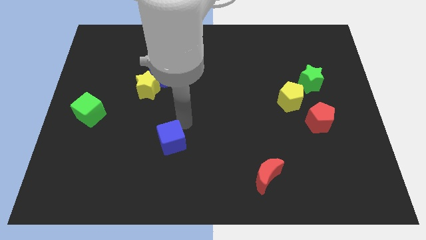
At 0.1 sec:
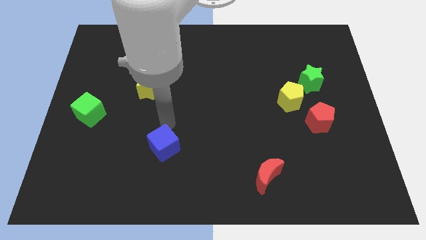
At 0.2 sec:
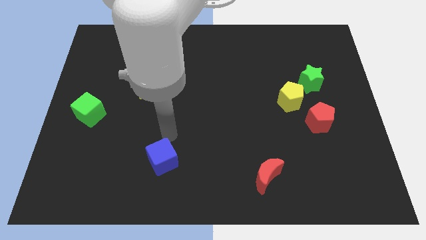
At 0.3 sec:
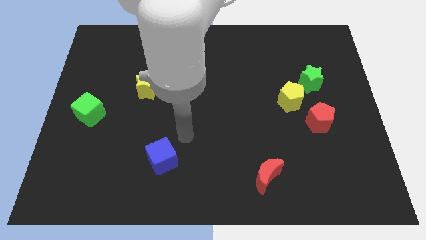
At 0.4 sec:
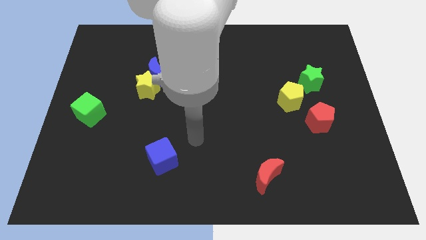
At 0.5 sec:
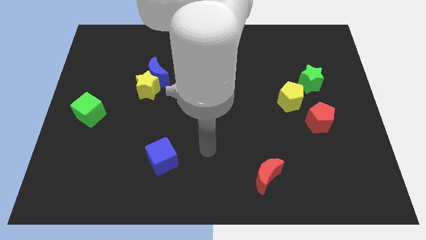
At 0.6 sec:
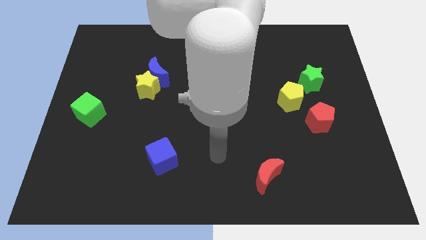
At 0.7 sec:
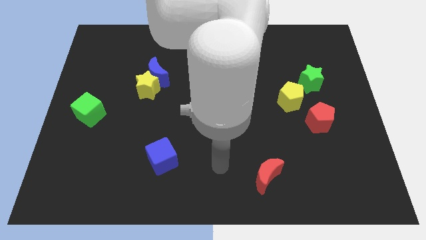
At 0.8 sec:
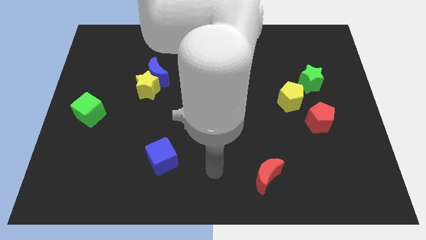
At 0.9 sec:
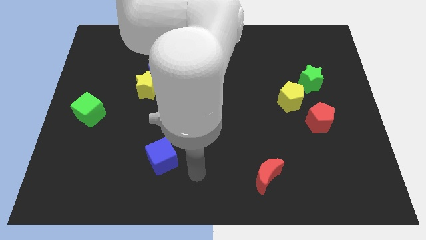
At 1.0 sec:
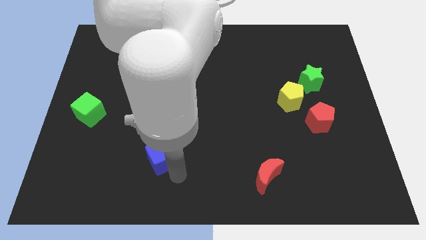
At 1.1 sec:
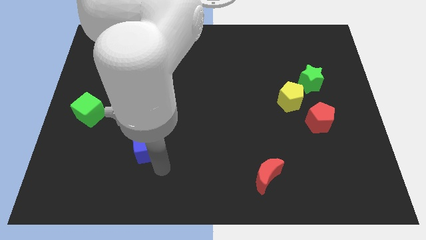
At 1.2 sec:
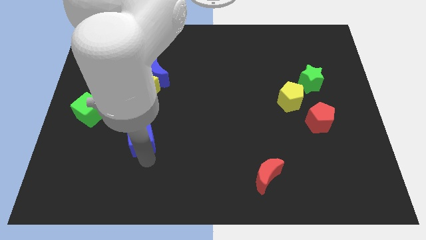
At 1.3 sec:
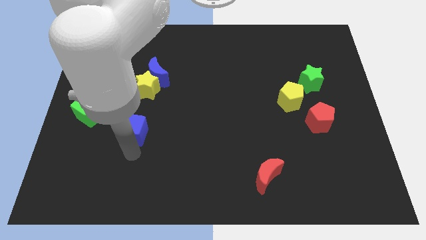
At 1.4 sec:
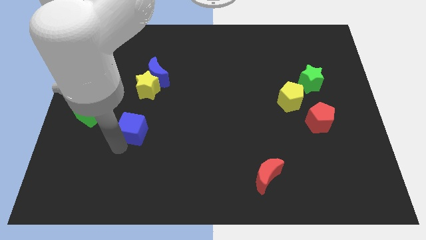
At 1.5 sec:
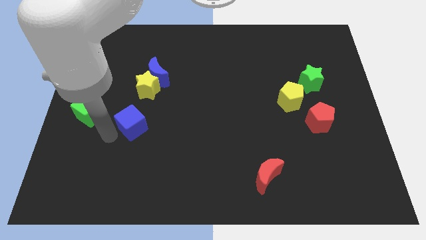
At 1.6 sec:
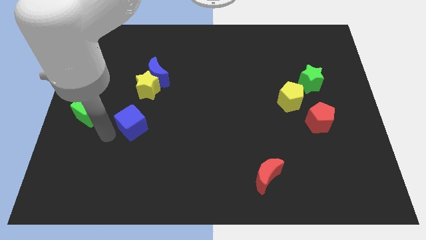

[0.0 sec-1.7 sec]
push the blue cube towards the green cube

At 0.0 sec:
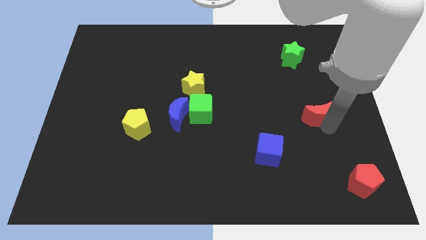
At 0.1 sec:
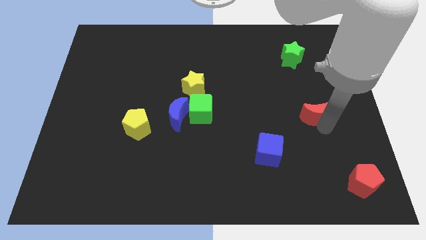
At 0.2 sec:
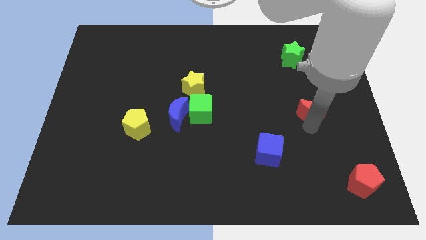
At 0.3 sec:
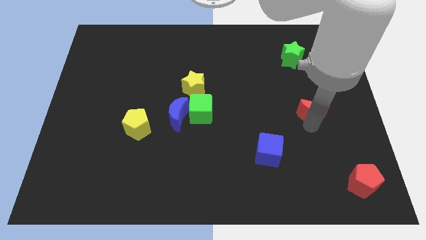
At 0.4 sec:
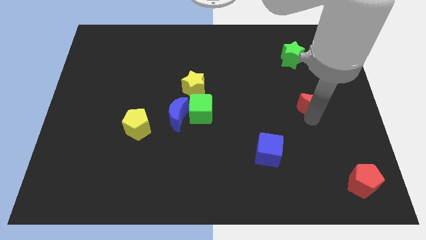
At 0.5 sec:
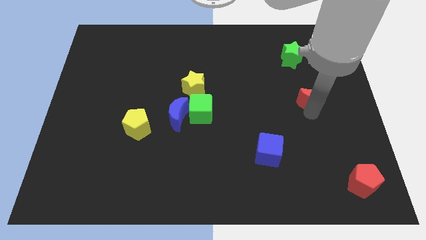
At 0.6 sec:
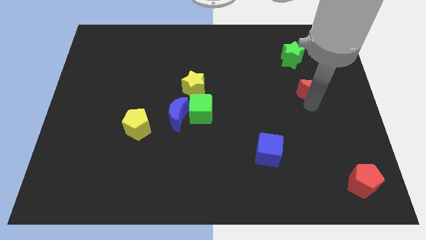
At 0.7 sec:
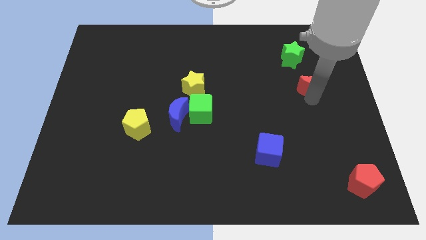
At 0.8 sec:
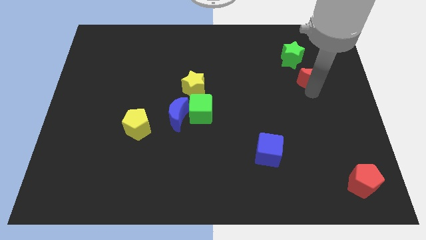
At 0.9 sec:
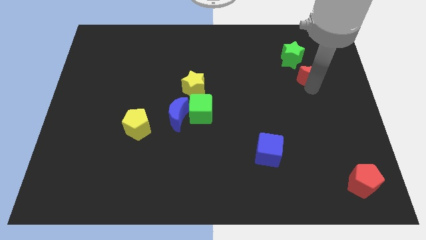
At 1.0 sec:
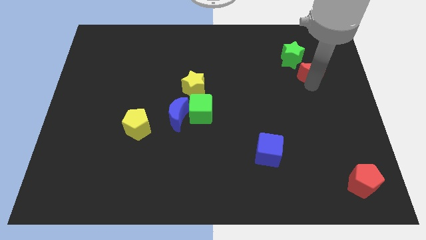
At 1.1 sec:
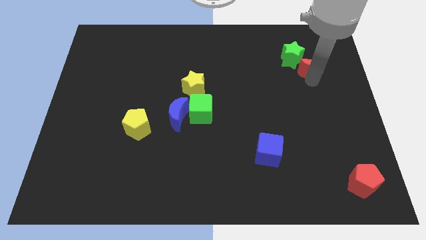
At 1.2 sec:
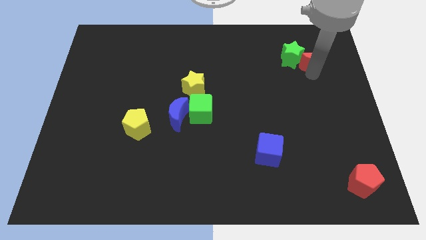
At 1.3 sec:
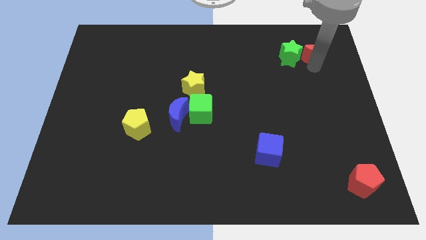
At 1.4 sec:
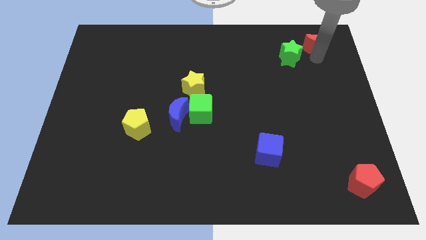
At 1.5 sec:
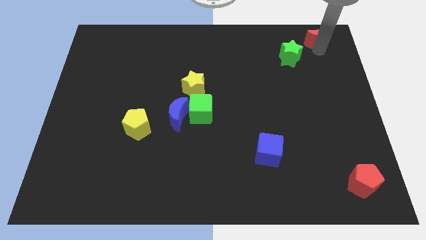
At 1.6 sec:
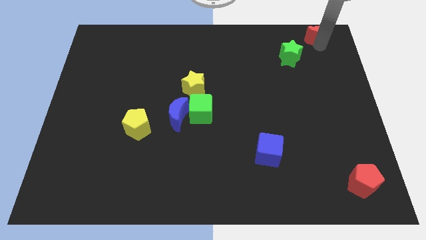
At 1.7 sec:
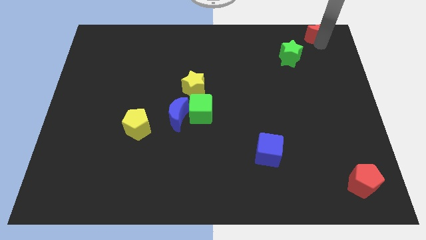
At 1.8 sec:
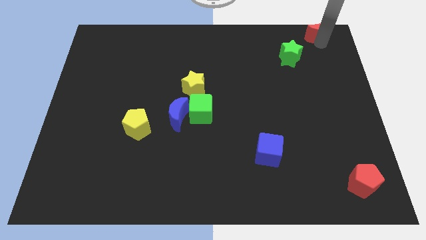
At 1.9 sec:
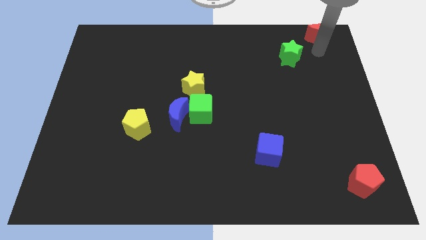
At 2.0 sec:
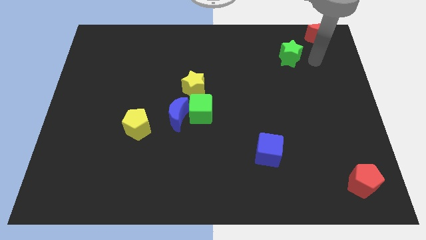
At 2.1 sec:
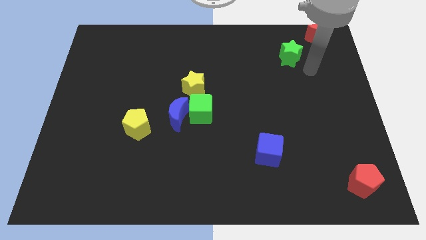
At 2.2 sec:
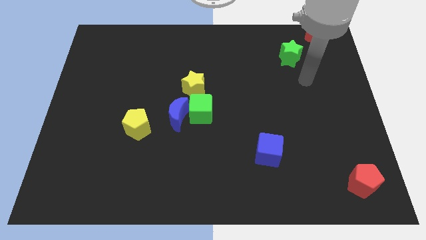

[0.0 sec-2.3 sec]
push the red moon to the top right side

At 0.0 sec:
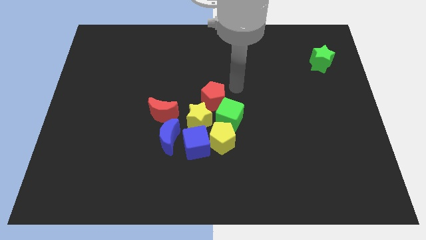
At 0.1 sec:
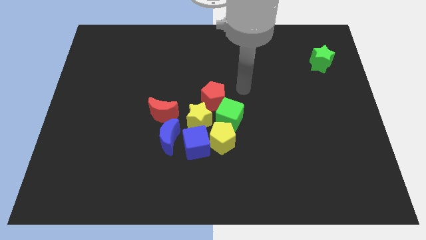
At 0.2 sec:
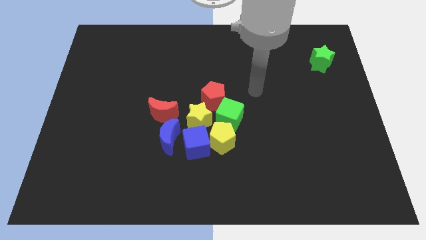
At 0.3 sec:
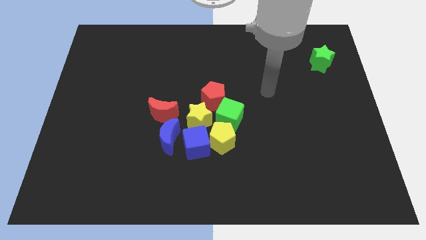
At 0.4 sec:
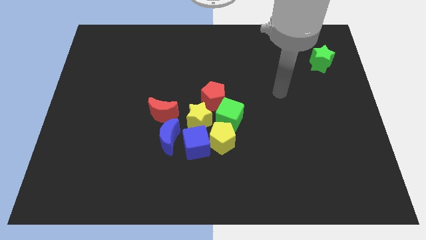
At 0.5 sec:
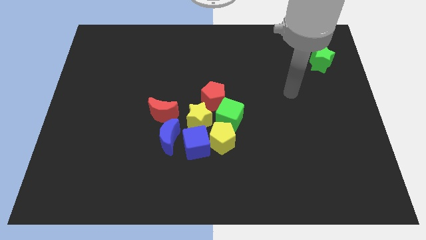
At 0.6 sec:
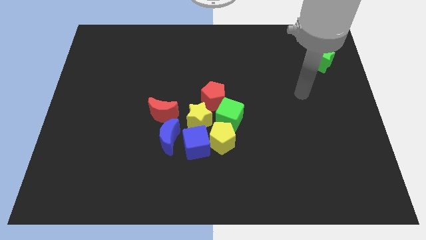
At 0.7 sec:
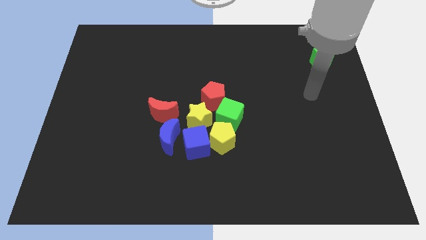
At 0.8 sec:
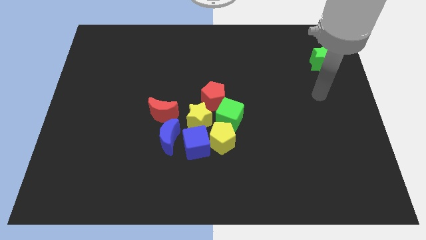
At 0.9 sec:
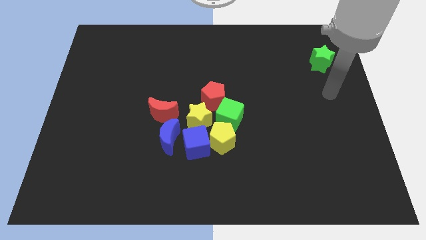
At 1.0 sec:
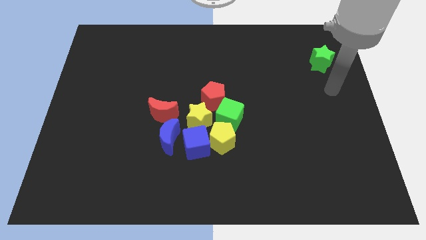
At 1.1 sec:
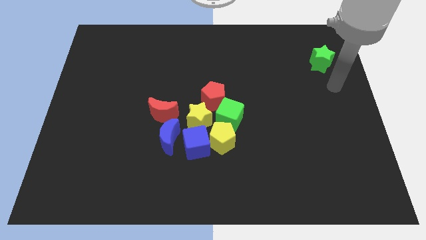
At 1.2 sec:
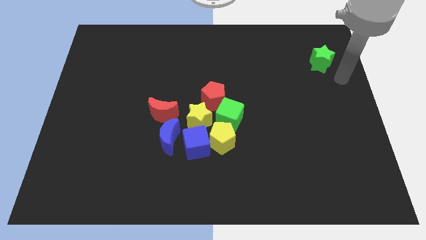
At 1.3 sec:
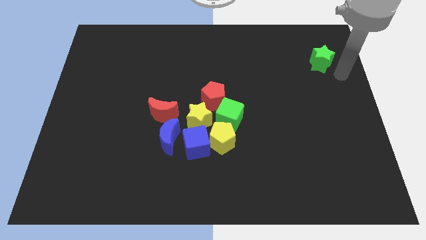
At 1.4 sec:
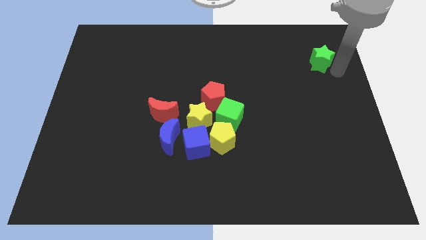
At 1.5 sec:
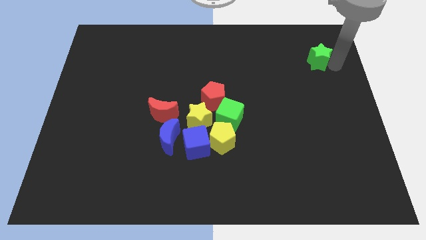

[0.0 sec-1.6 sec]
move your arm to the right of green star

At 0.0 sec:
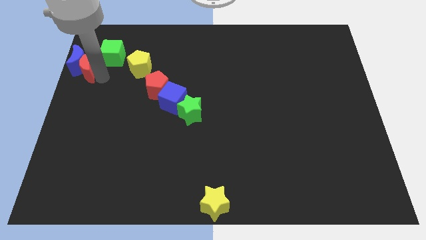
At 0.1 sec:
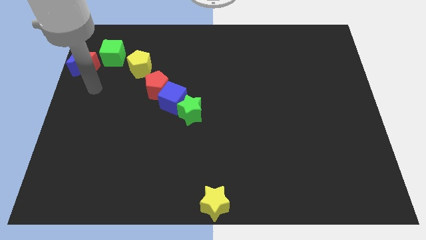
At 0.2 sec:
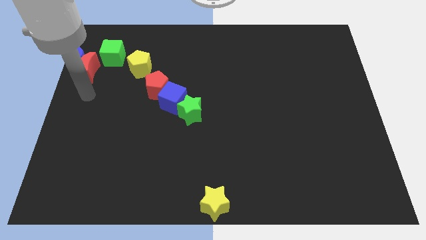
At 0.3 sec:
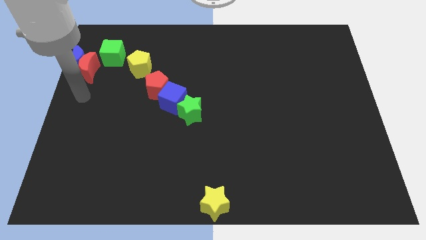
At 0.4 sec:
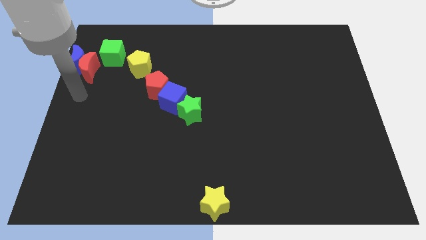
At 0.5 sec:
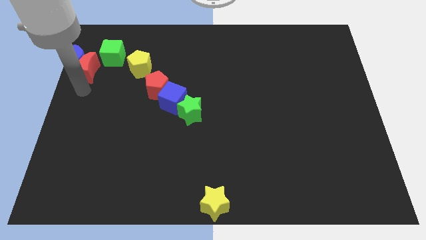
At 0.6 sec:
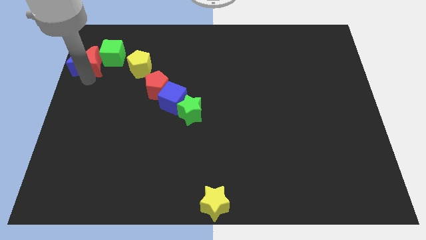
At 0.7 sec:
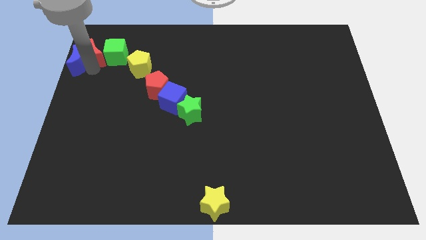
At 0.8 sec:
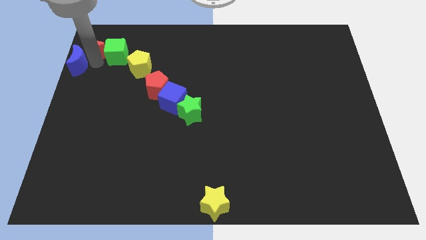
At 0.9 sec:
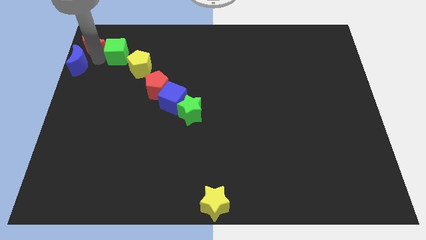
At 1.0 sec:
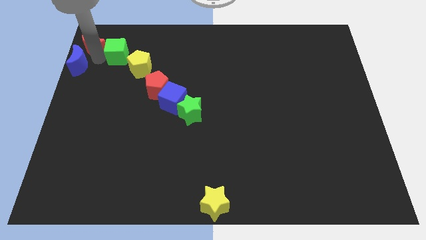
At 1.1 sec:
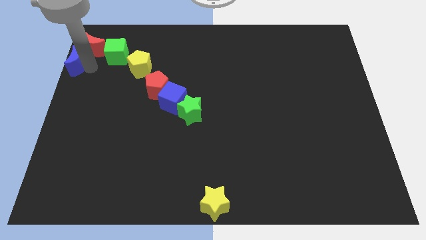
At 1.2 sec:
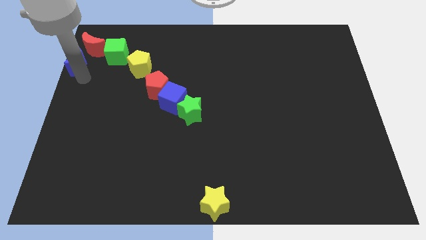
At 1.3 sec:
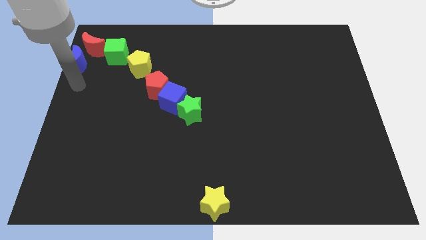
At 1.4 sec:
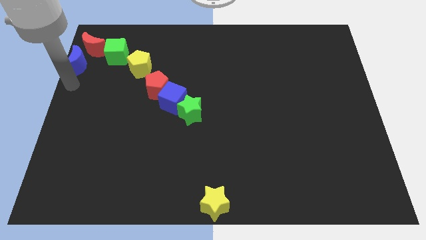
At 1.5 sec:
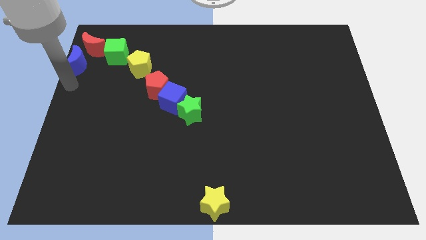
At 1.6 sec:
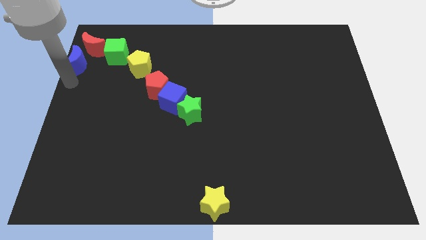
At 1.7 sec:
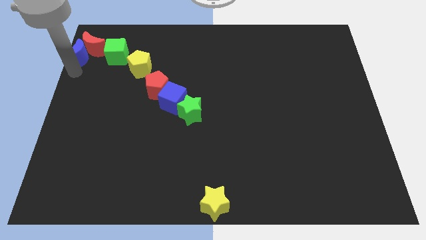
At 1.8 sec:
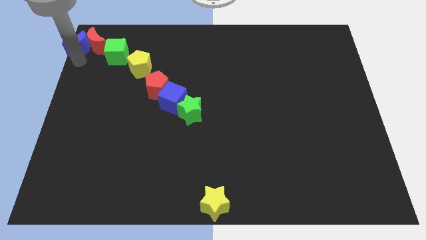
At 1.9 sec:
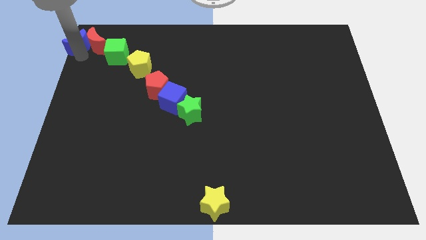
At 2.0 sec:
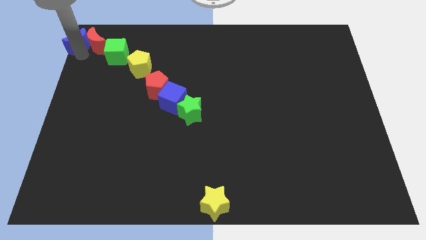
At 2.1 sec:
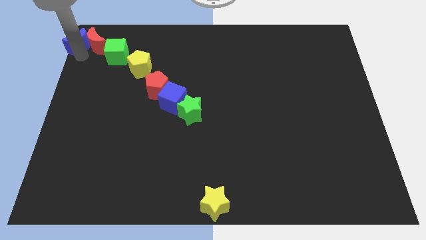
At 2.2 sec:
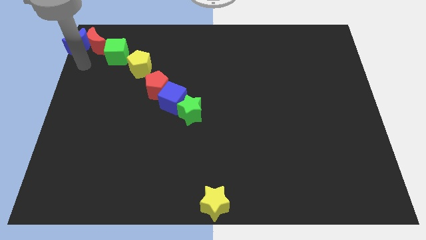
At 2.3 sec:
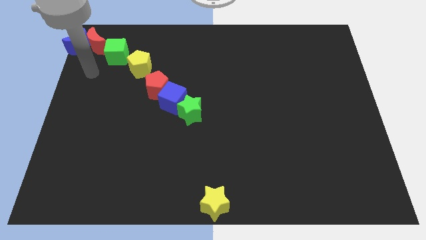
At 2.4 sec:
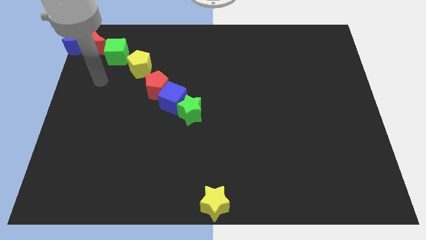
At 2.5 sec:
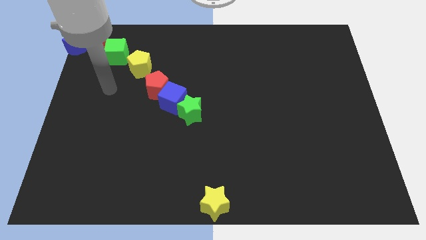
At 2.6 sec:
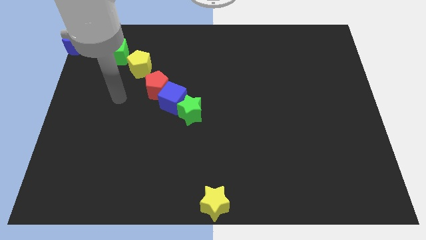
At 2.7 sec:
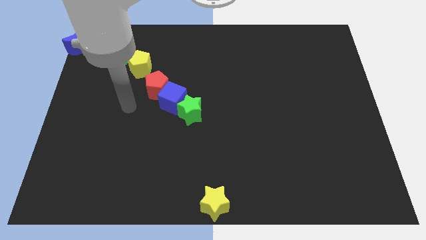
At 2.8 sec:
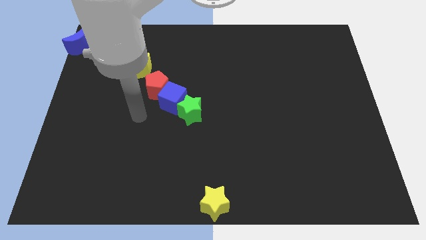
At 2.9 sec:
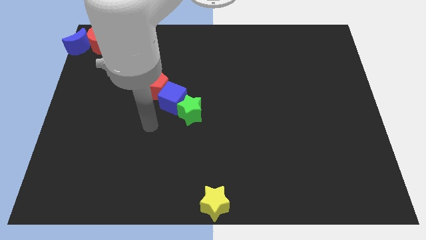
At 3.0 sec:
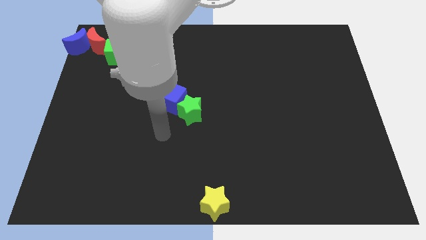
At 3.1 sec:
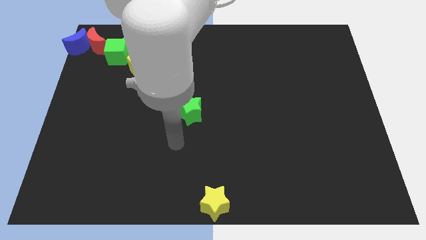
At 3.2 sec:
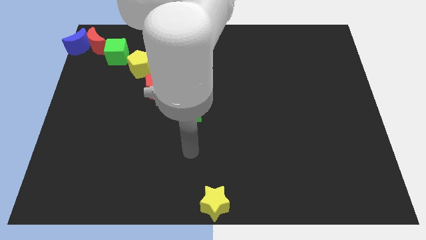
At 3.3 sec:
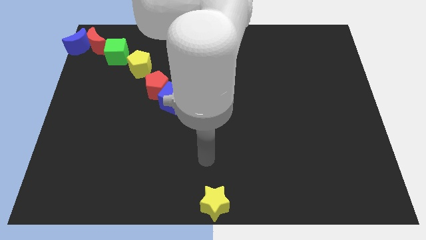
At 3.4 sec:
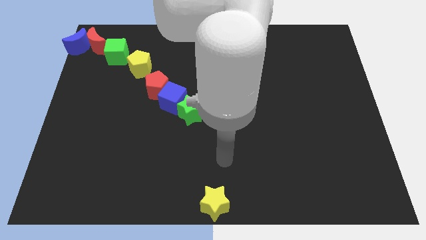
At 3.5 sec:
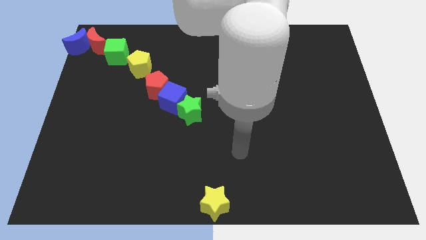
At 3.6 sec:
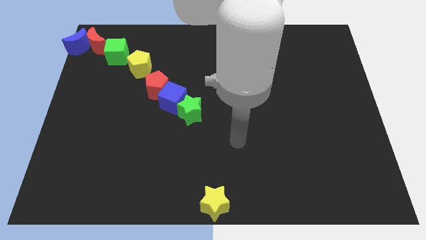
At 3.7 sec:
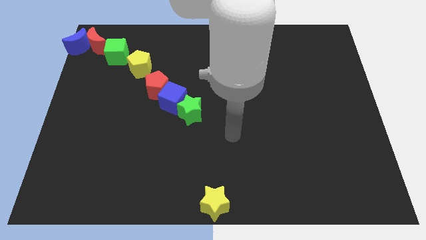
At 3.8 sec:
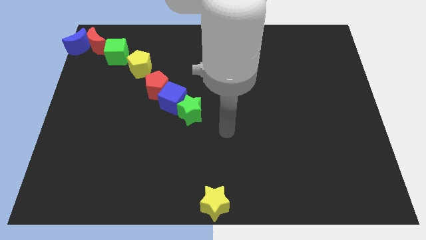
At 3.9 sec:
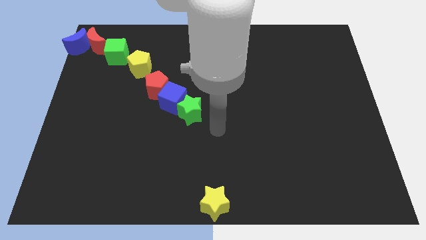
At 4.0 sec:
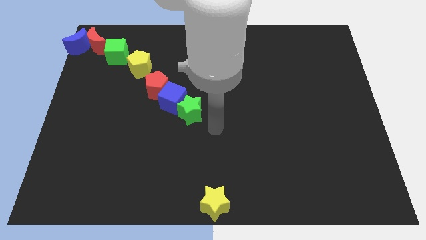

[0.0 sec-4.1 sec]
place the crescents at the top left of the board
